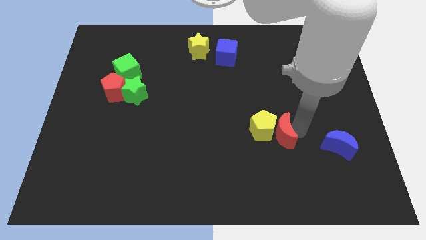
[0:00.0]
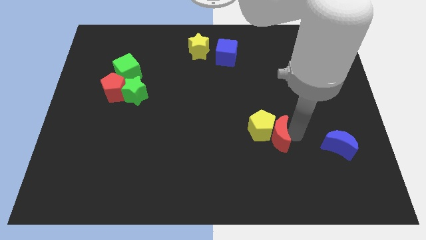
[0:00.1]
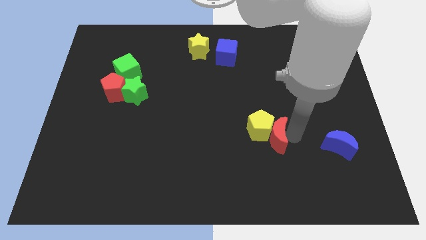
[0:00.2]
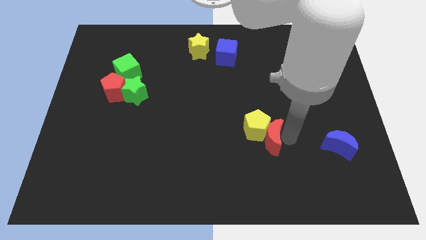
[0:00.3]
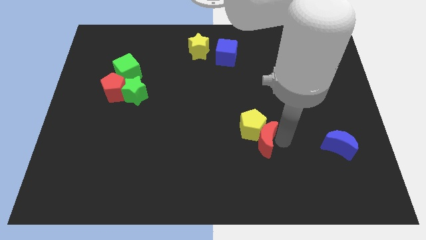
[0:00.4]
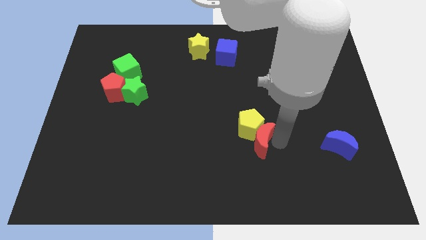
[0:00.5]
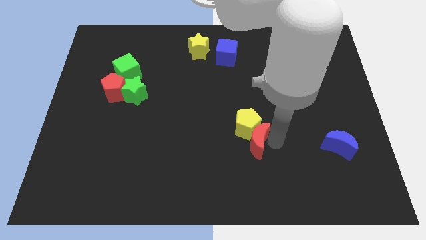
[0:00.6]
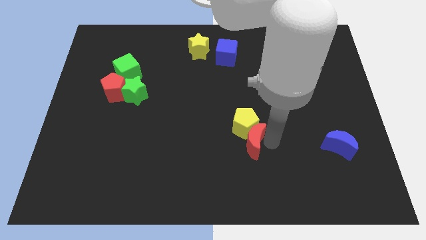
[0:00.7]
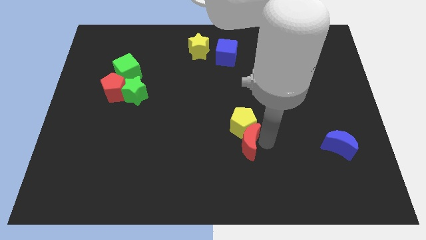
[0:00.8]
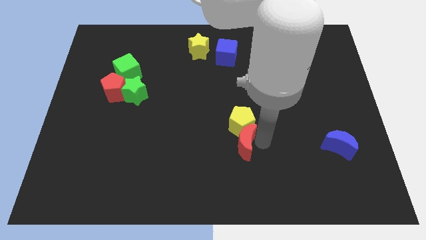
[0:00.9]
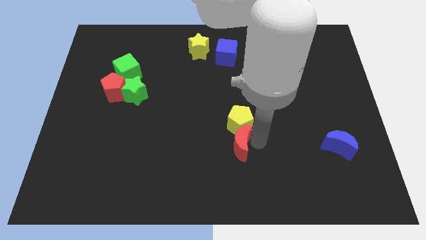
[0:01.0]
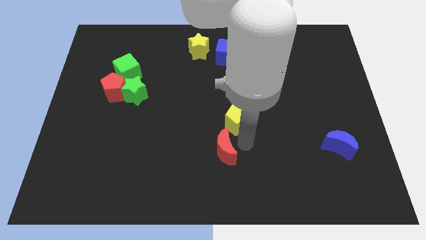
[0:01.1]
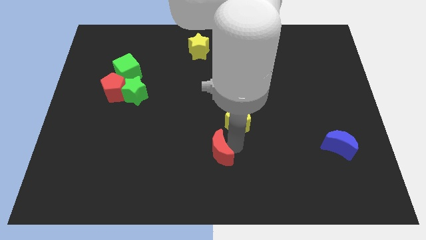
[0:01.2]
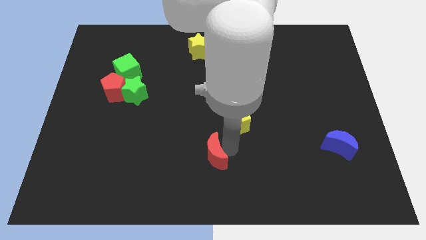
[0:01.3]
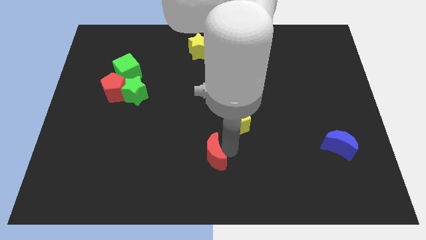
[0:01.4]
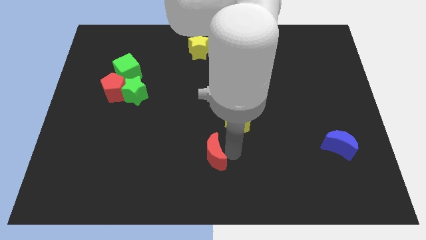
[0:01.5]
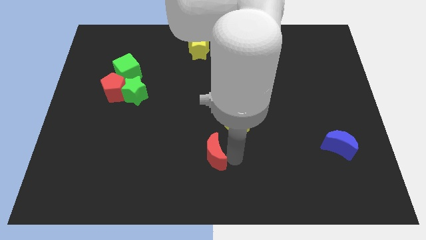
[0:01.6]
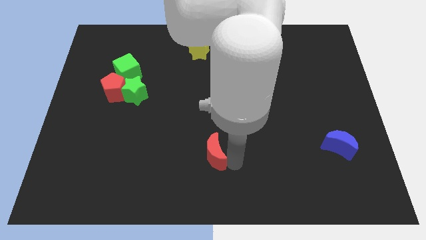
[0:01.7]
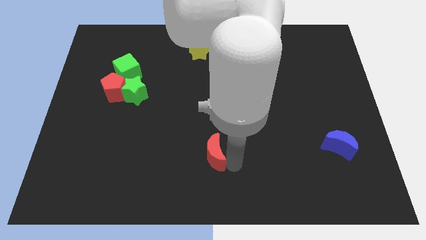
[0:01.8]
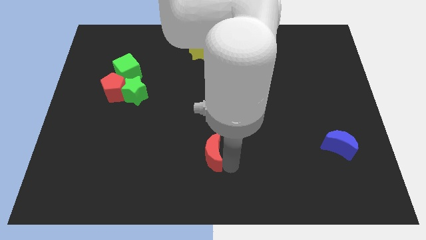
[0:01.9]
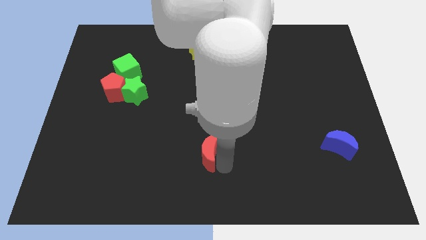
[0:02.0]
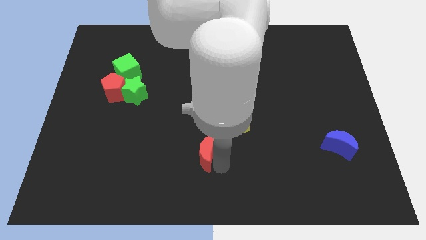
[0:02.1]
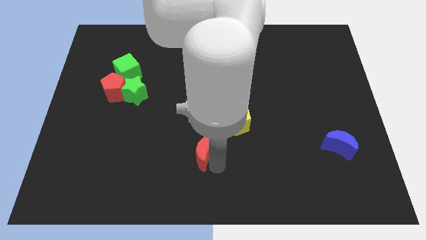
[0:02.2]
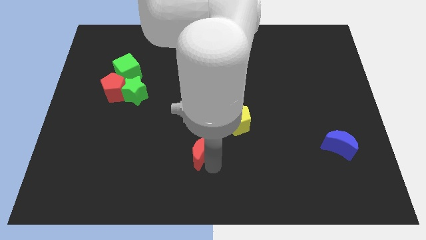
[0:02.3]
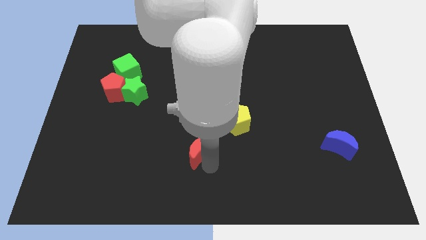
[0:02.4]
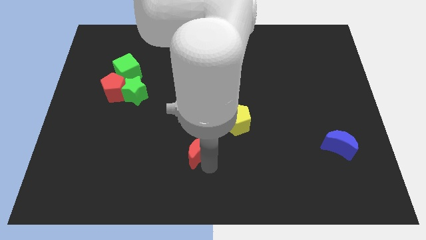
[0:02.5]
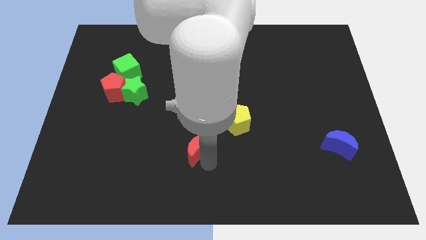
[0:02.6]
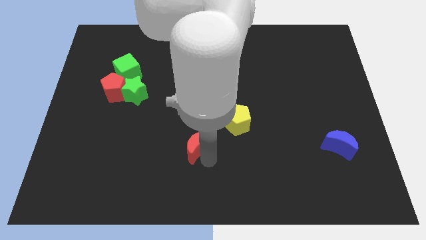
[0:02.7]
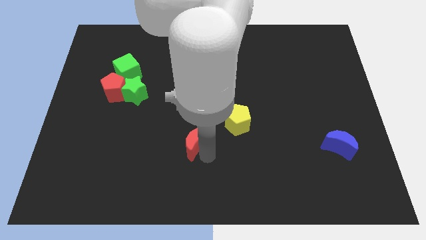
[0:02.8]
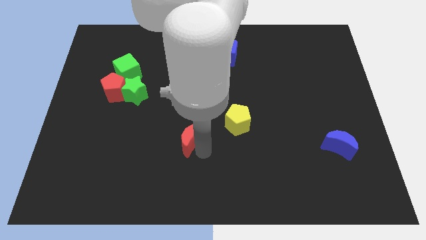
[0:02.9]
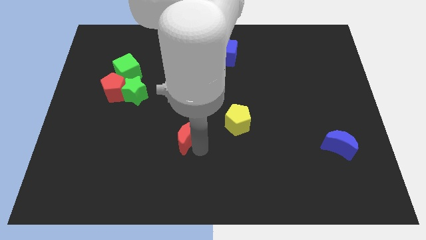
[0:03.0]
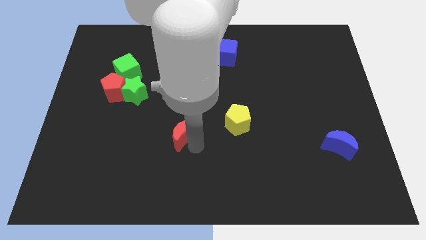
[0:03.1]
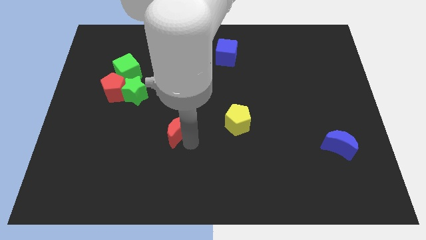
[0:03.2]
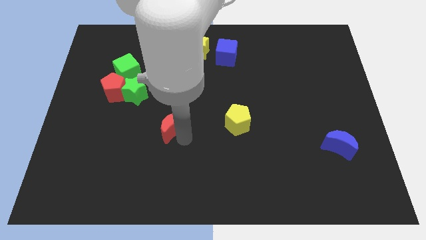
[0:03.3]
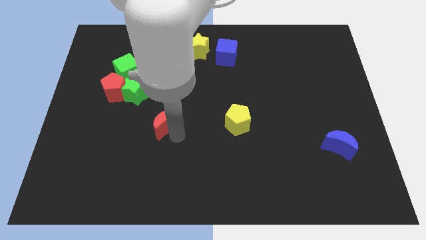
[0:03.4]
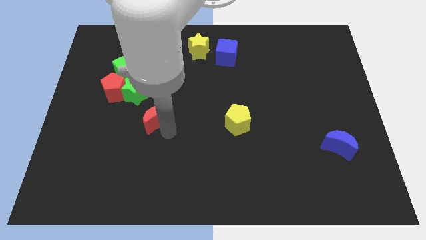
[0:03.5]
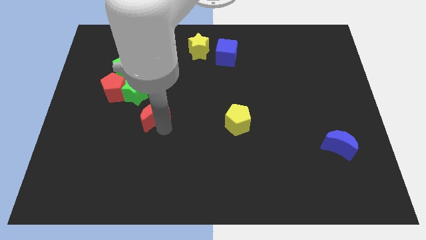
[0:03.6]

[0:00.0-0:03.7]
place the red moon left to the yellow pentagon

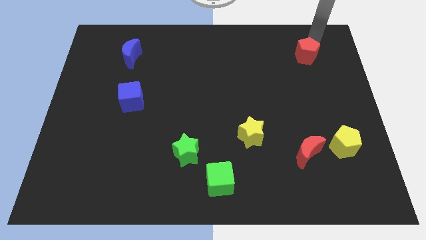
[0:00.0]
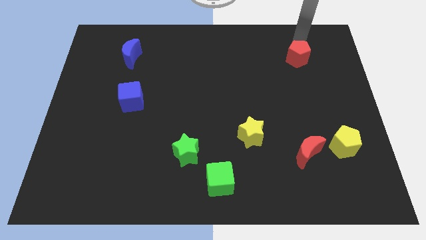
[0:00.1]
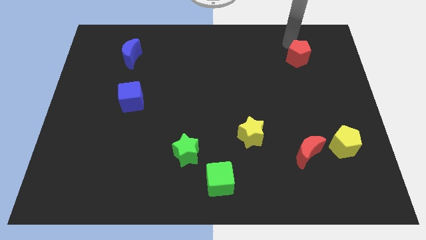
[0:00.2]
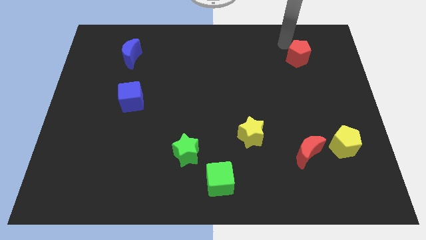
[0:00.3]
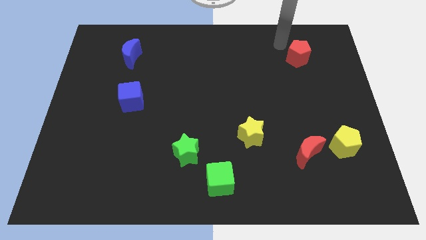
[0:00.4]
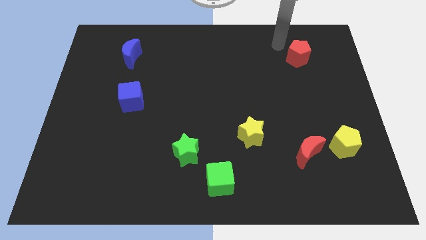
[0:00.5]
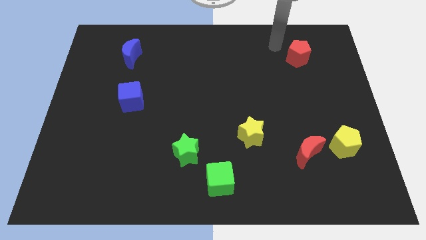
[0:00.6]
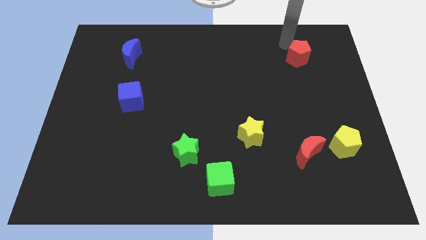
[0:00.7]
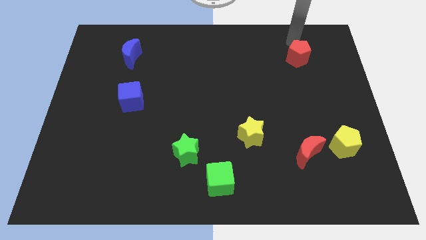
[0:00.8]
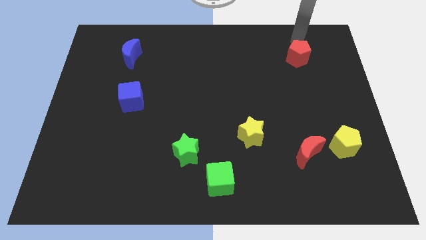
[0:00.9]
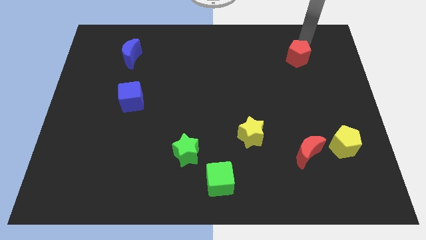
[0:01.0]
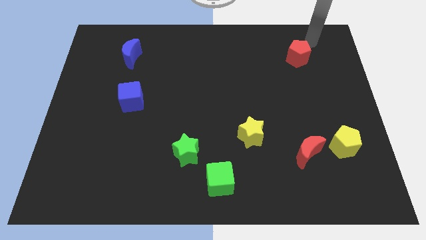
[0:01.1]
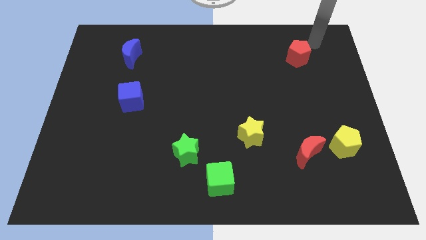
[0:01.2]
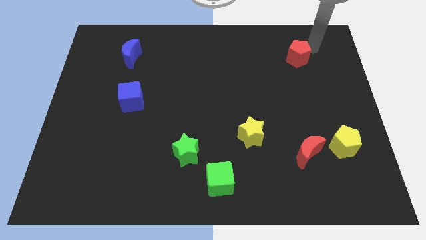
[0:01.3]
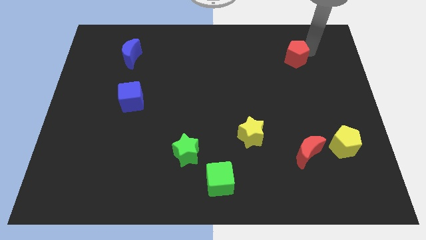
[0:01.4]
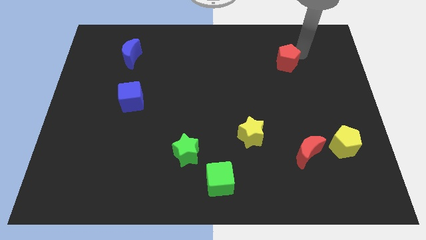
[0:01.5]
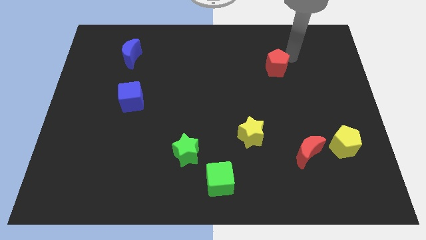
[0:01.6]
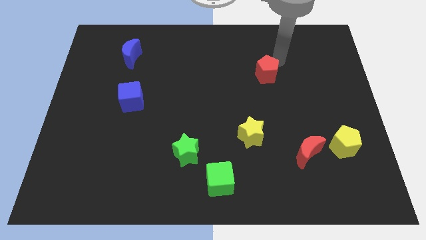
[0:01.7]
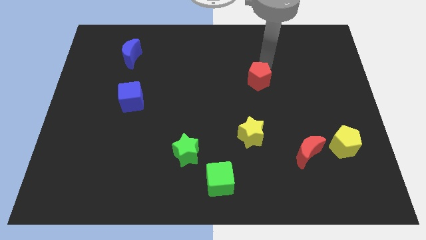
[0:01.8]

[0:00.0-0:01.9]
slide the red pentagon diagonally top left to the red moon

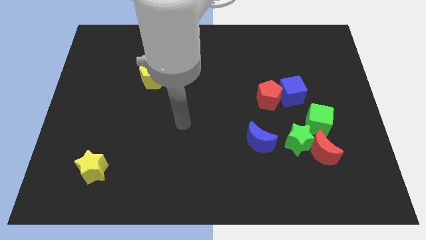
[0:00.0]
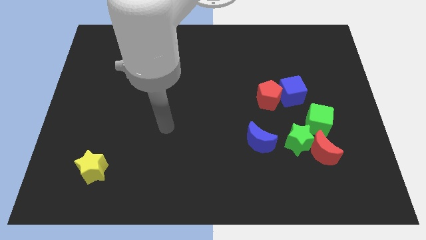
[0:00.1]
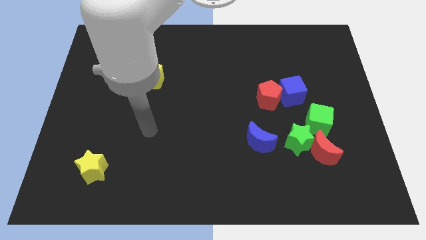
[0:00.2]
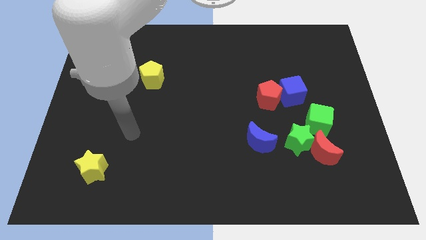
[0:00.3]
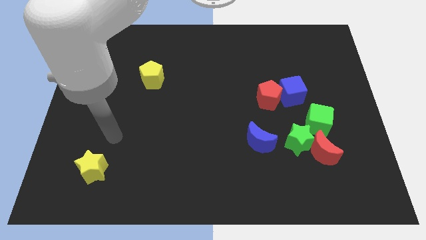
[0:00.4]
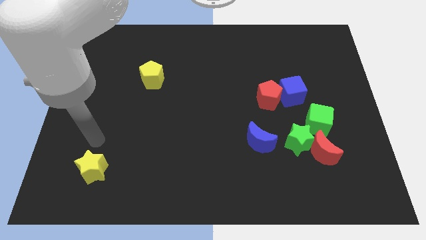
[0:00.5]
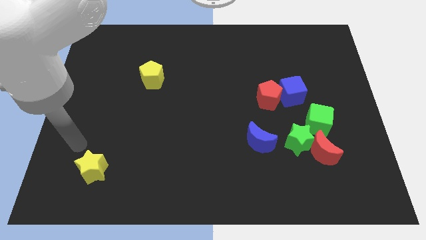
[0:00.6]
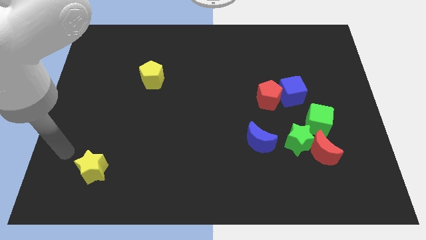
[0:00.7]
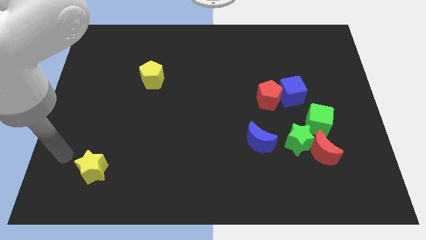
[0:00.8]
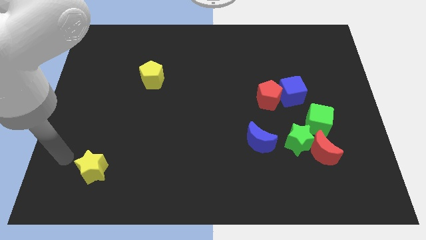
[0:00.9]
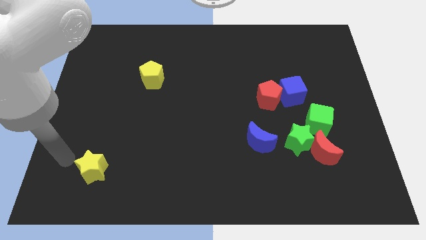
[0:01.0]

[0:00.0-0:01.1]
move your arm to the left side of the yellow star

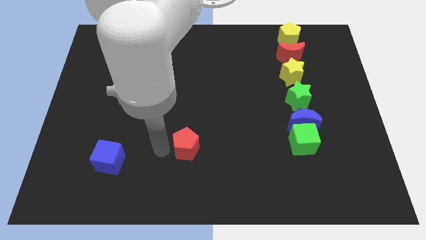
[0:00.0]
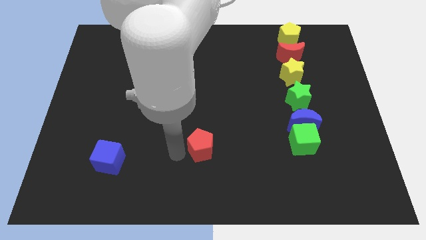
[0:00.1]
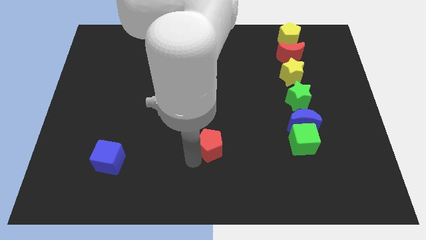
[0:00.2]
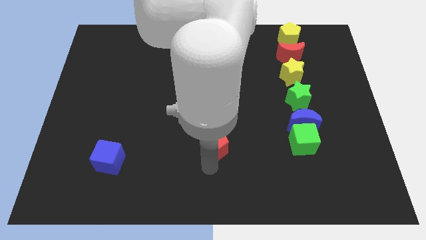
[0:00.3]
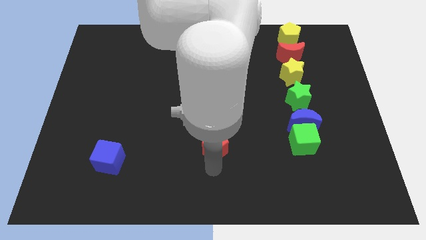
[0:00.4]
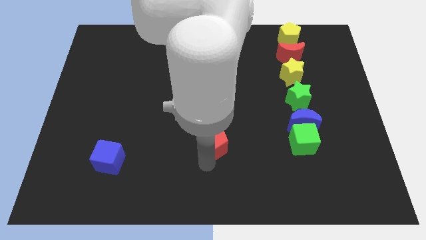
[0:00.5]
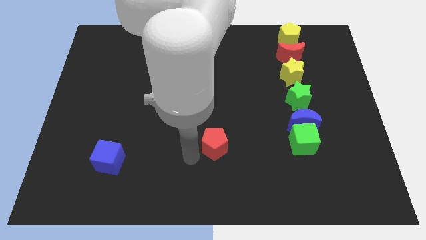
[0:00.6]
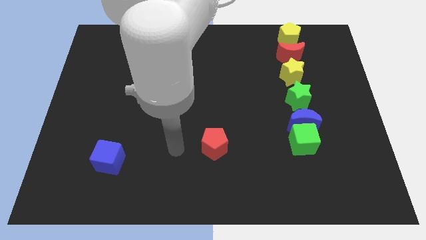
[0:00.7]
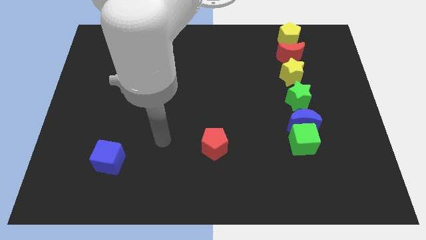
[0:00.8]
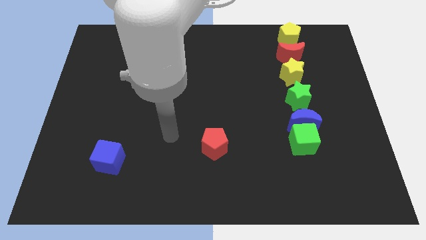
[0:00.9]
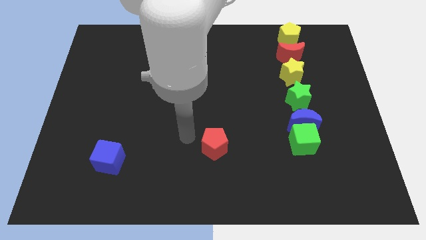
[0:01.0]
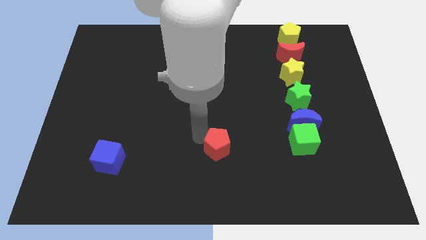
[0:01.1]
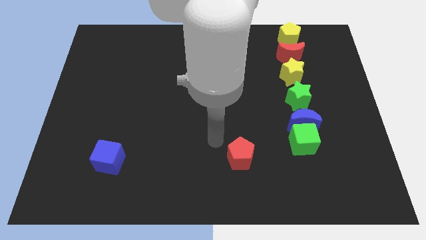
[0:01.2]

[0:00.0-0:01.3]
hit on the left side of red pentagon

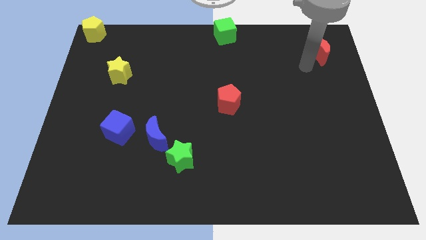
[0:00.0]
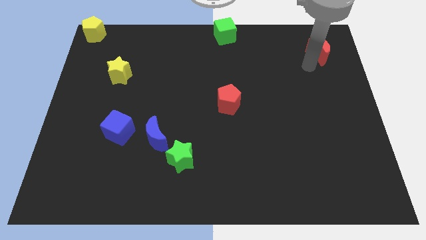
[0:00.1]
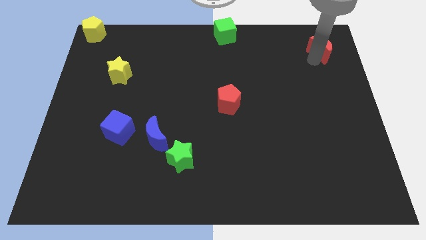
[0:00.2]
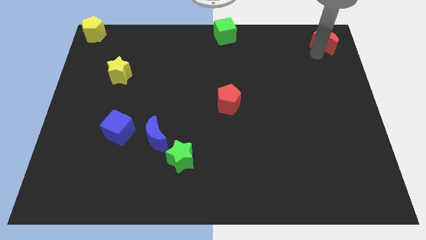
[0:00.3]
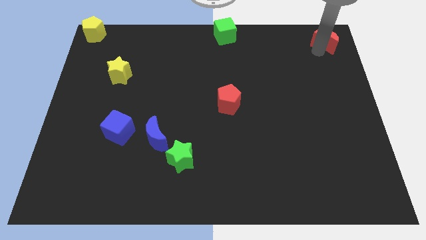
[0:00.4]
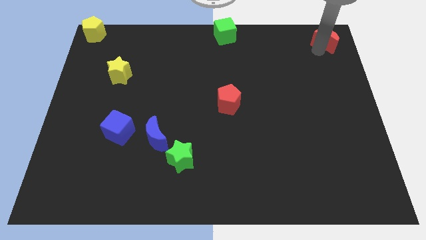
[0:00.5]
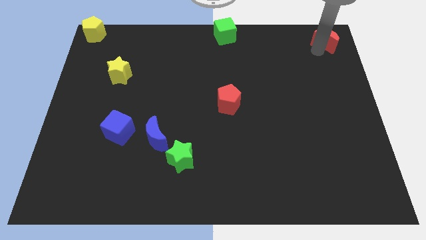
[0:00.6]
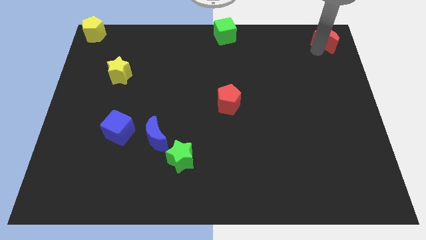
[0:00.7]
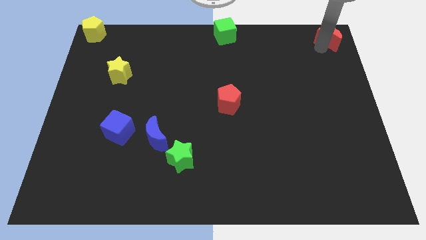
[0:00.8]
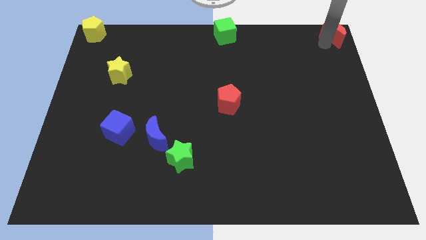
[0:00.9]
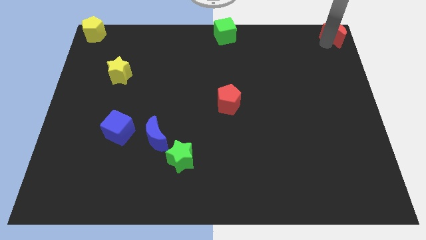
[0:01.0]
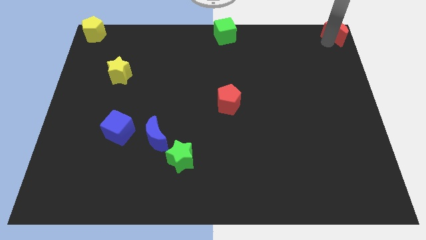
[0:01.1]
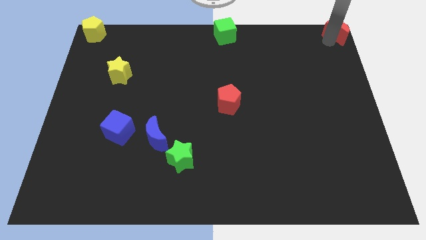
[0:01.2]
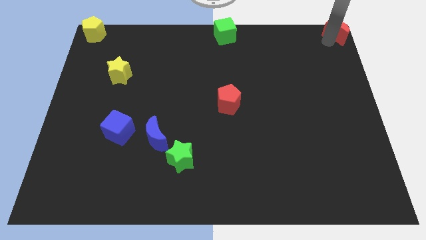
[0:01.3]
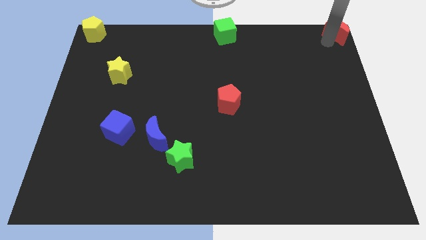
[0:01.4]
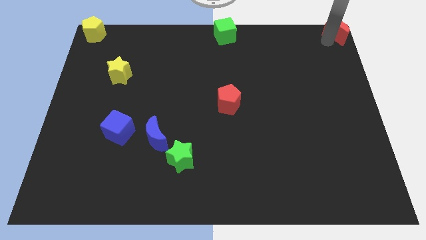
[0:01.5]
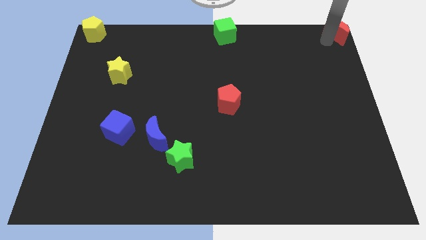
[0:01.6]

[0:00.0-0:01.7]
move the red crescent to the top right
